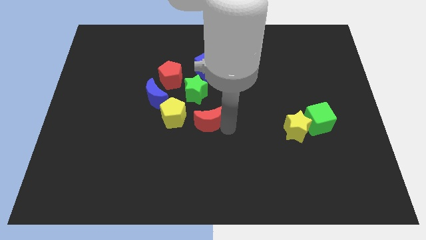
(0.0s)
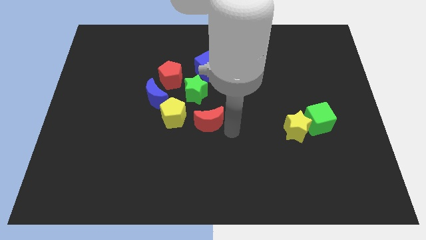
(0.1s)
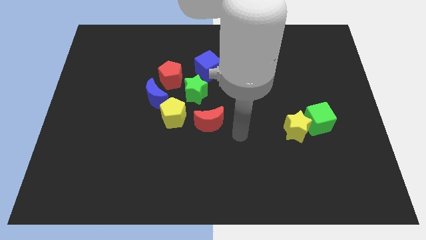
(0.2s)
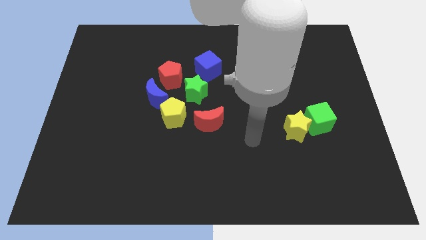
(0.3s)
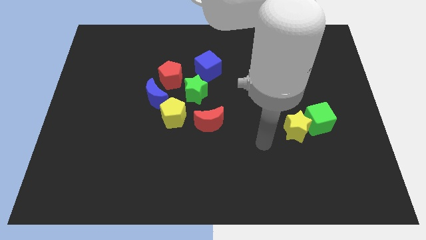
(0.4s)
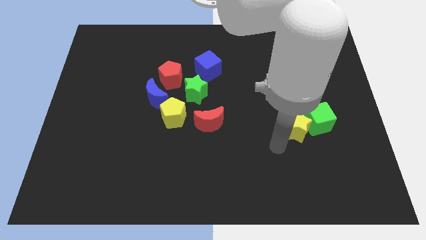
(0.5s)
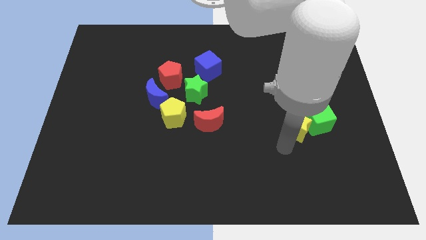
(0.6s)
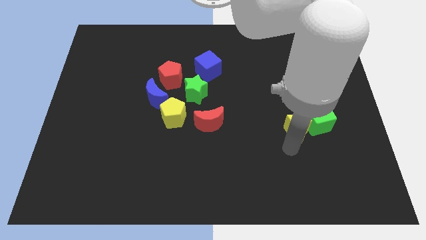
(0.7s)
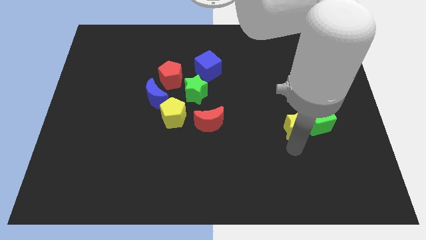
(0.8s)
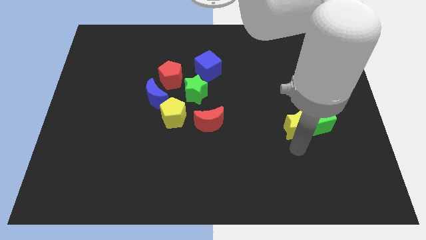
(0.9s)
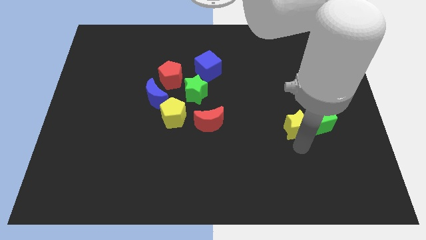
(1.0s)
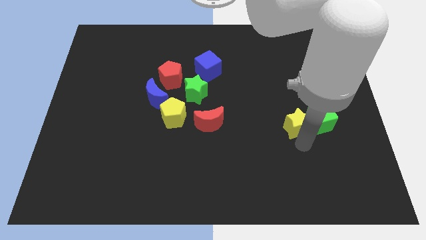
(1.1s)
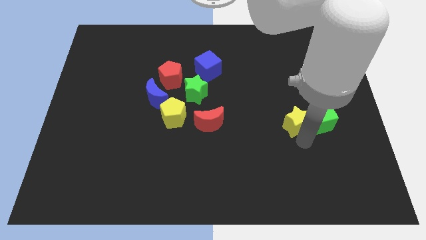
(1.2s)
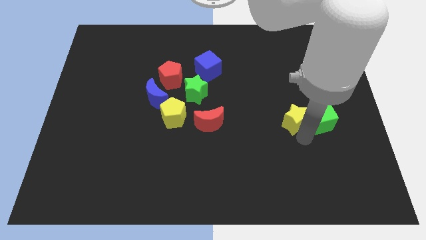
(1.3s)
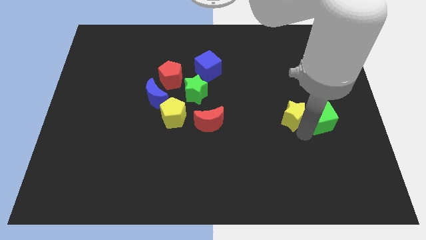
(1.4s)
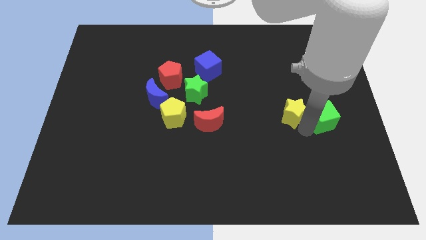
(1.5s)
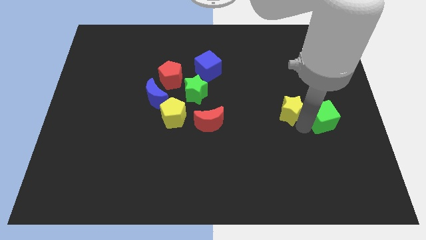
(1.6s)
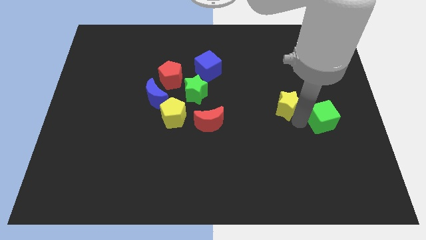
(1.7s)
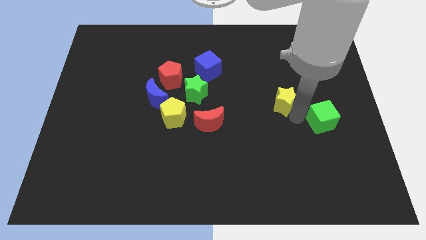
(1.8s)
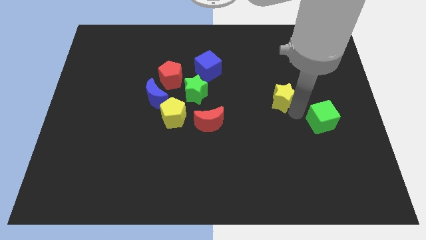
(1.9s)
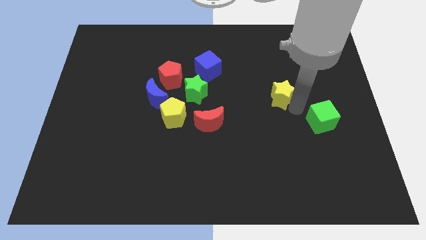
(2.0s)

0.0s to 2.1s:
slide the yellow star slightly upwards

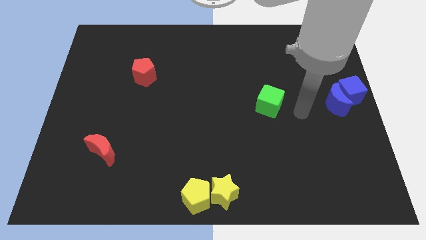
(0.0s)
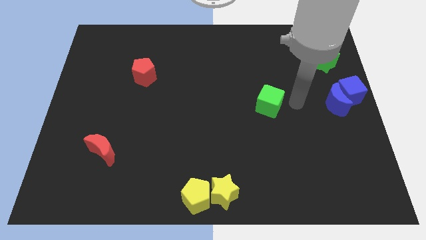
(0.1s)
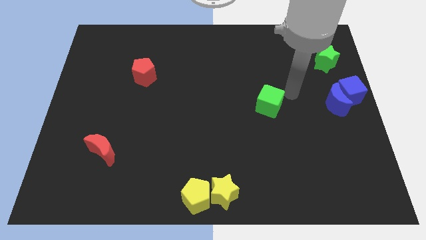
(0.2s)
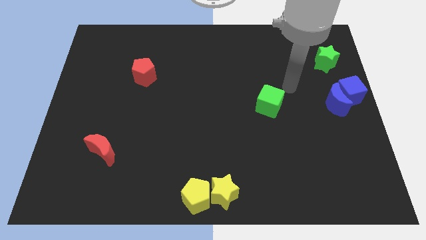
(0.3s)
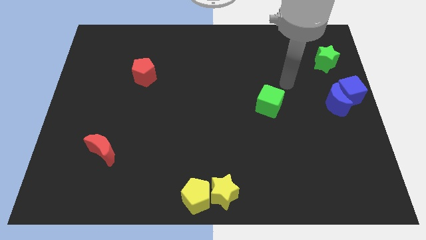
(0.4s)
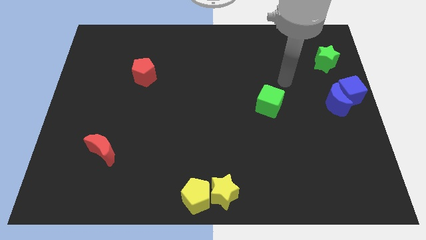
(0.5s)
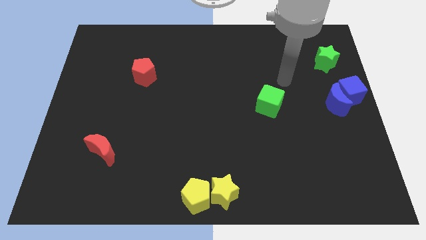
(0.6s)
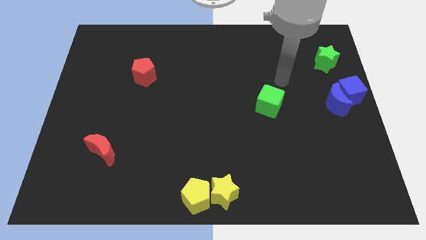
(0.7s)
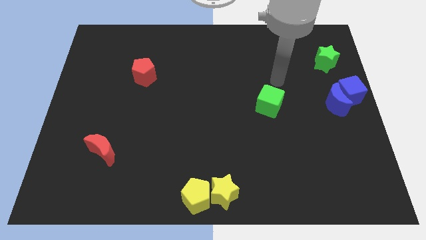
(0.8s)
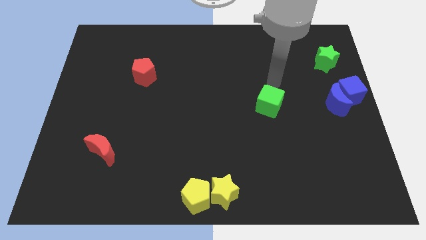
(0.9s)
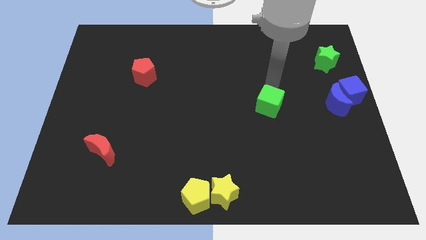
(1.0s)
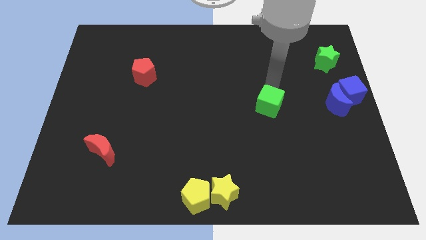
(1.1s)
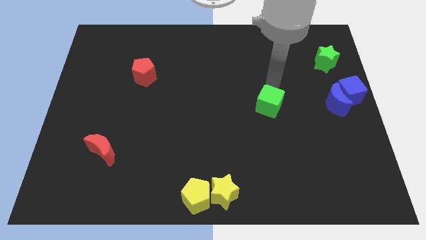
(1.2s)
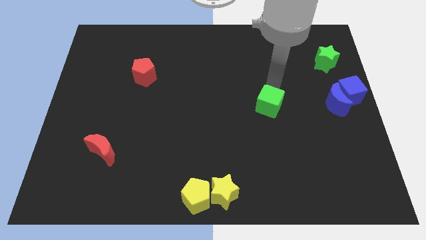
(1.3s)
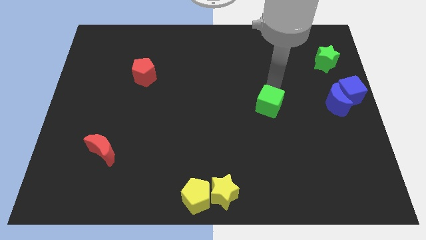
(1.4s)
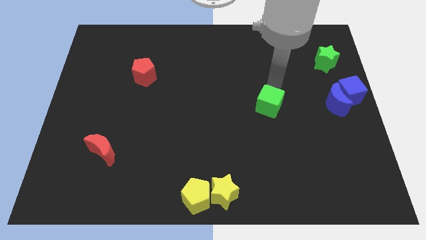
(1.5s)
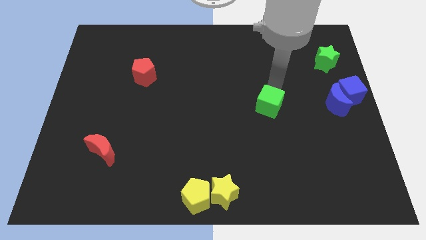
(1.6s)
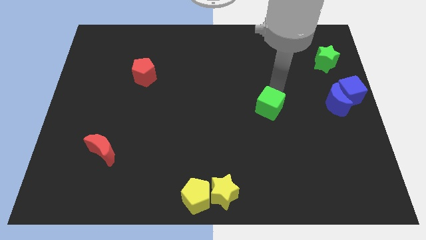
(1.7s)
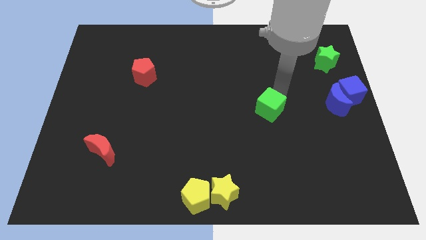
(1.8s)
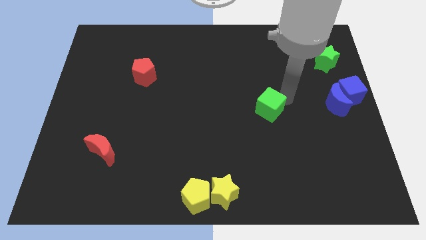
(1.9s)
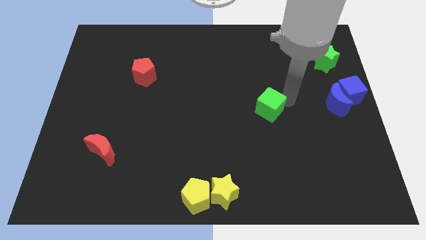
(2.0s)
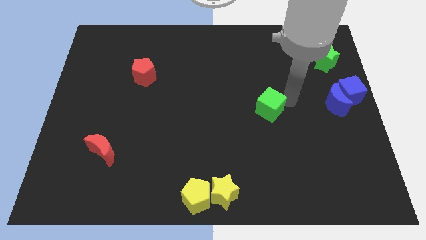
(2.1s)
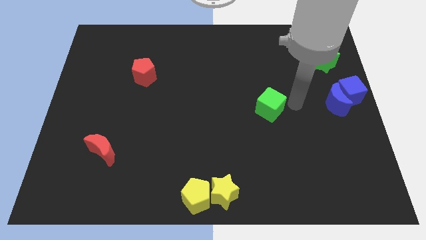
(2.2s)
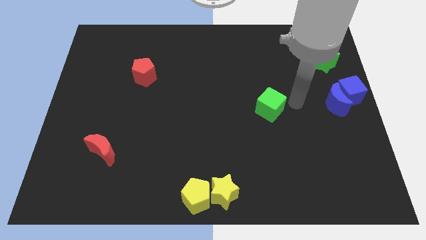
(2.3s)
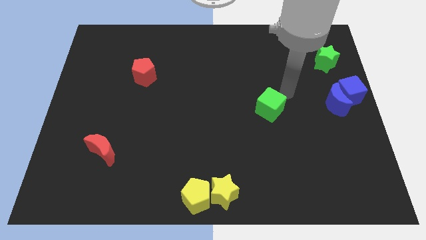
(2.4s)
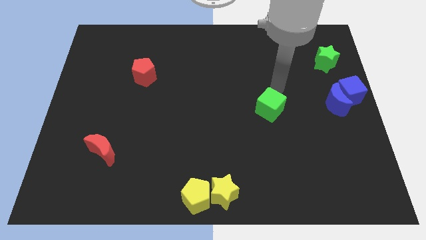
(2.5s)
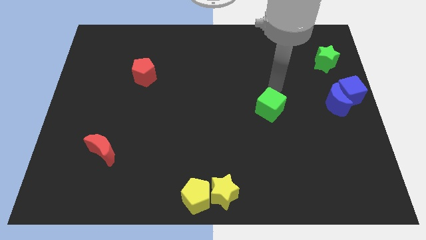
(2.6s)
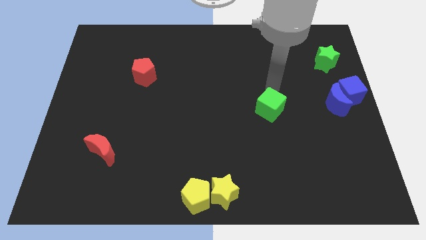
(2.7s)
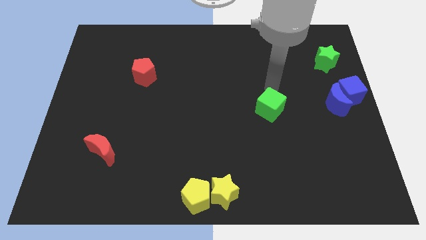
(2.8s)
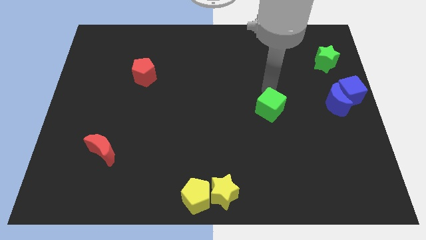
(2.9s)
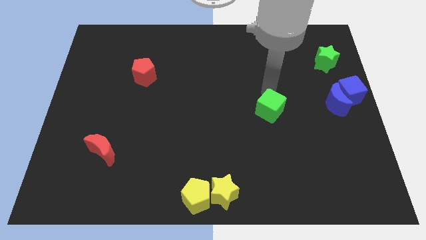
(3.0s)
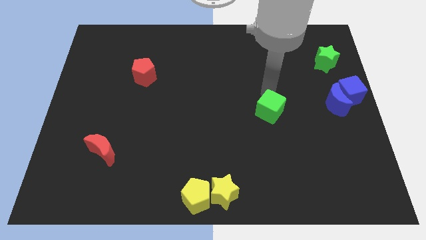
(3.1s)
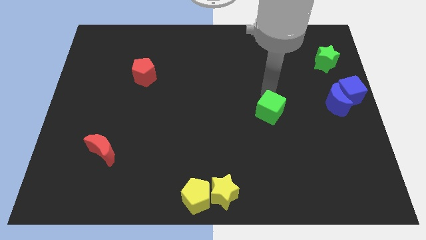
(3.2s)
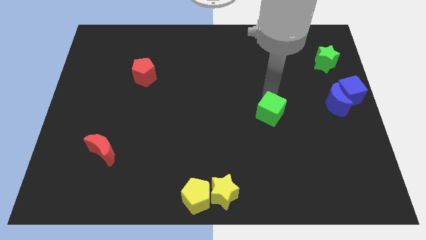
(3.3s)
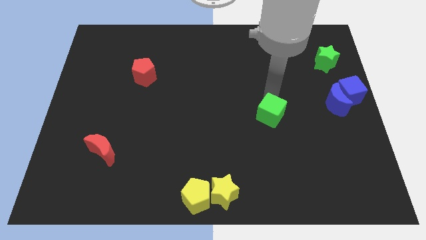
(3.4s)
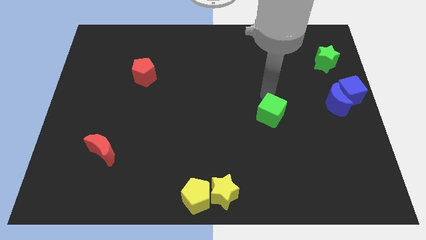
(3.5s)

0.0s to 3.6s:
slightly push the green cube downwards

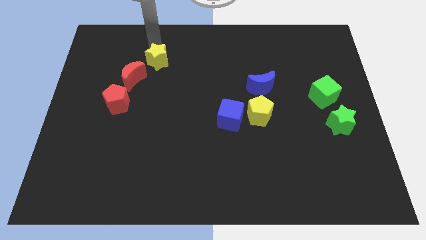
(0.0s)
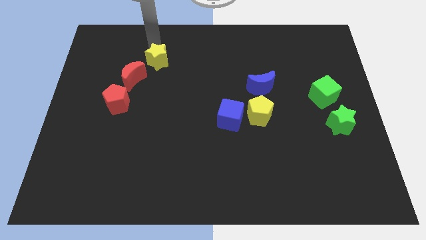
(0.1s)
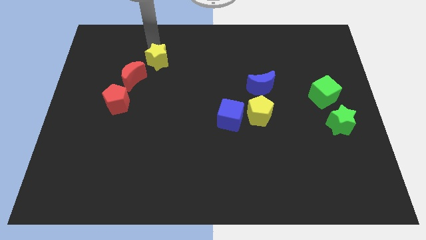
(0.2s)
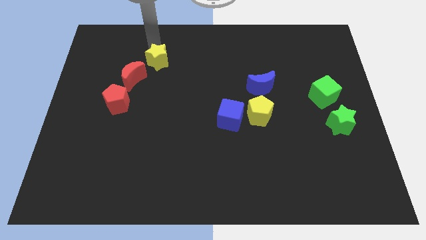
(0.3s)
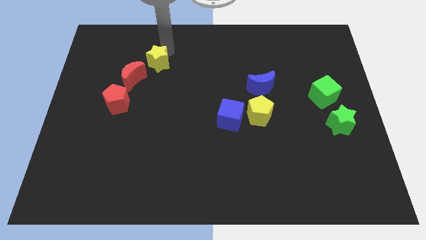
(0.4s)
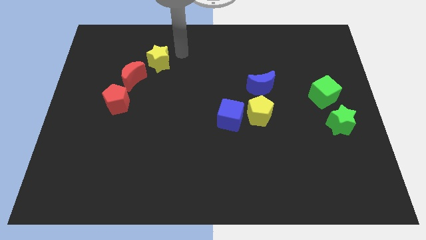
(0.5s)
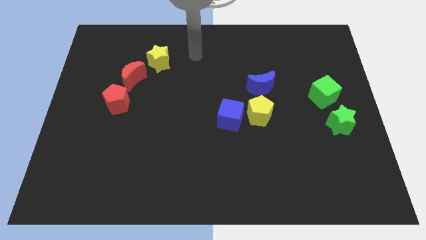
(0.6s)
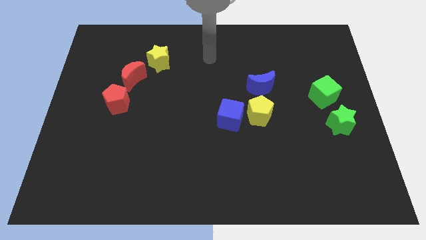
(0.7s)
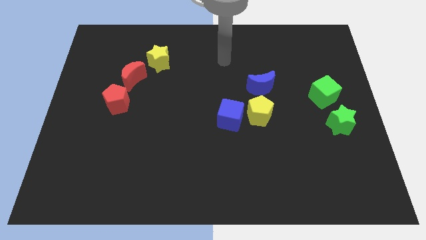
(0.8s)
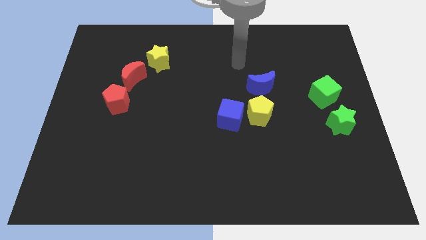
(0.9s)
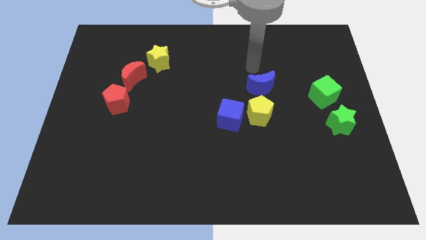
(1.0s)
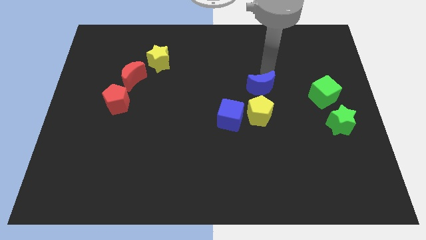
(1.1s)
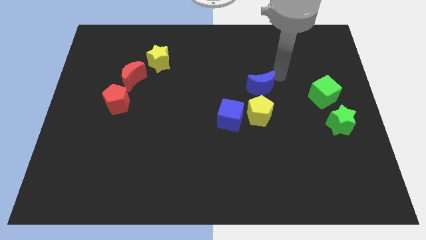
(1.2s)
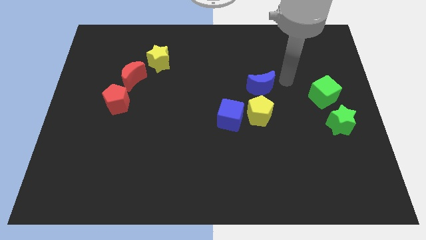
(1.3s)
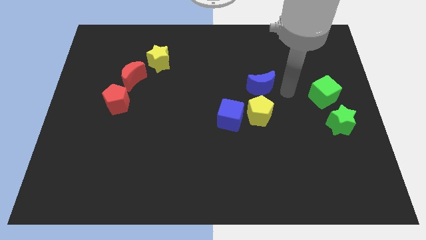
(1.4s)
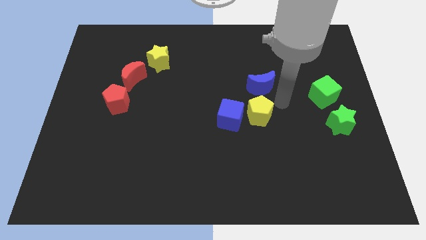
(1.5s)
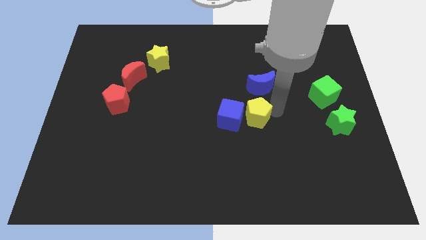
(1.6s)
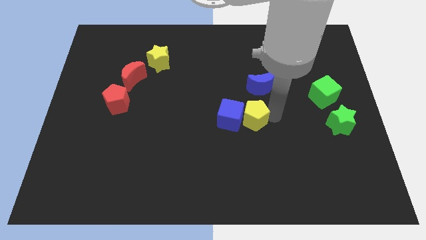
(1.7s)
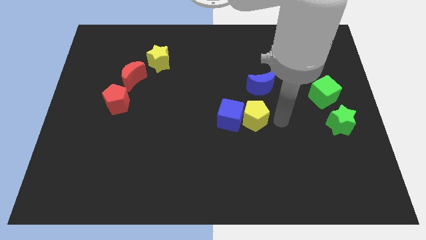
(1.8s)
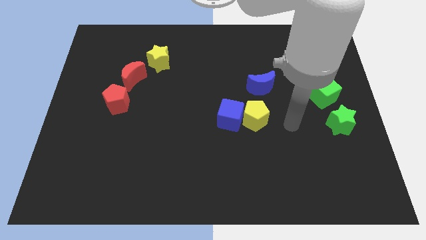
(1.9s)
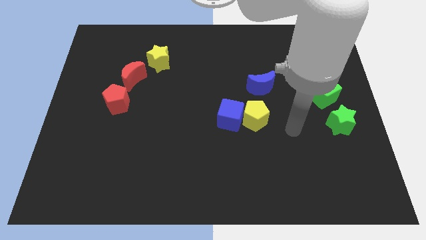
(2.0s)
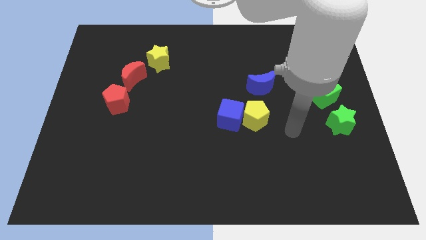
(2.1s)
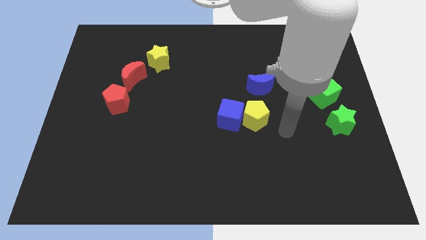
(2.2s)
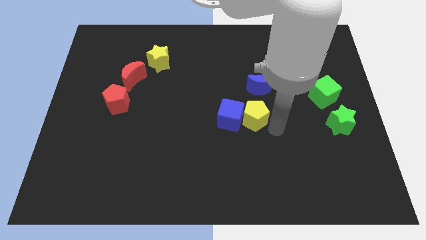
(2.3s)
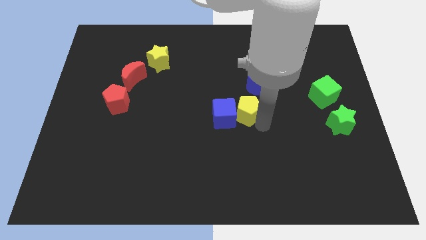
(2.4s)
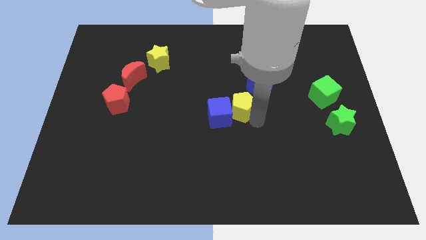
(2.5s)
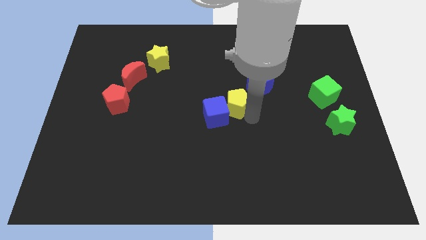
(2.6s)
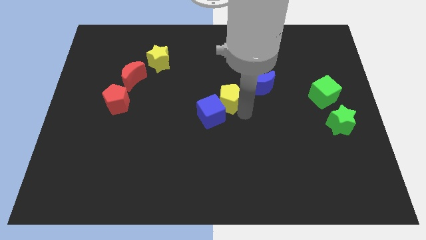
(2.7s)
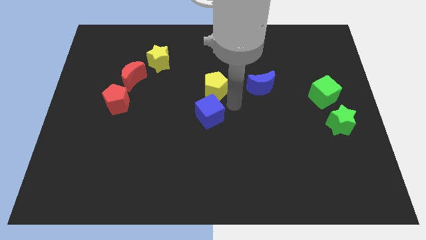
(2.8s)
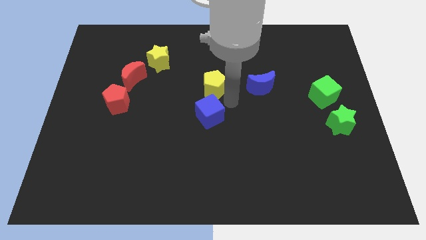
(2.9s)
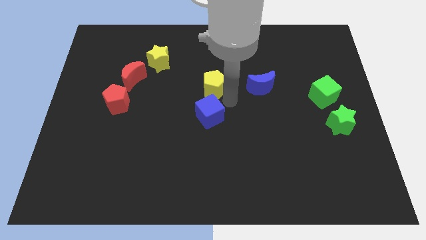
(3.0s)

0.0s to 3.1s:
move the arm away from the yellow star

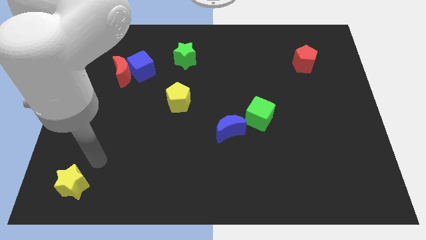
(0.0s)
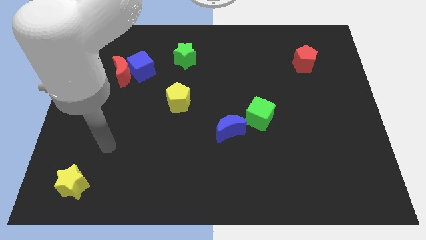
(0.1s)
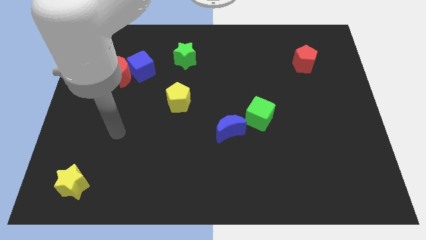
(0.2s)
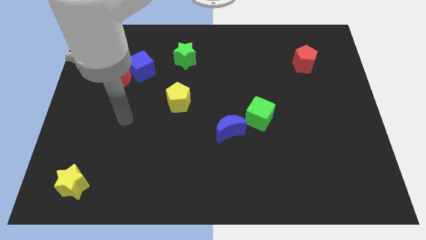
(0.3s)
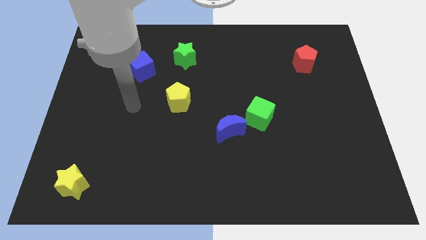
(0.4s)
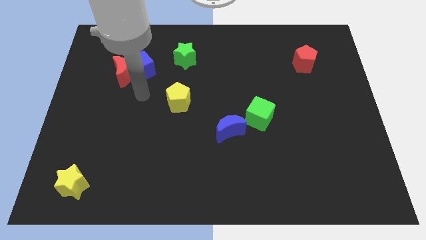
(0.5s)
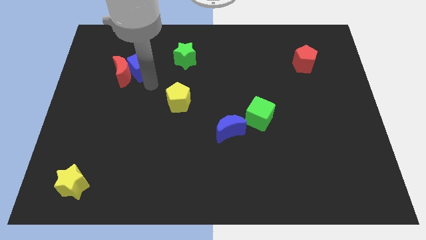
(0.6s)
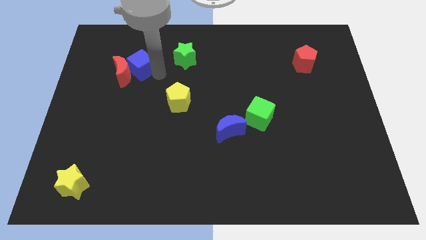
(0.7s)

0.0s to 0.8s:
touch the blue cube at the right side
